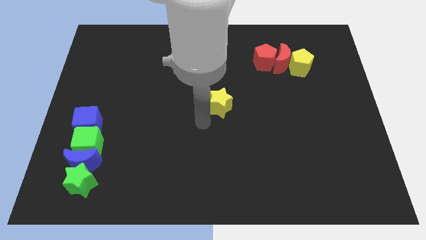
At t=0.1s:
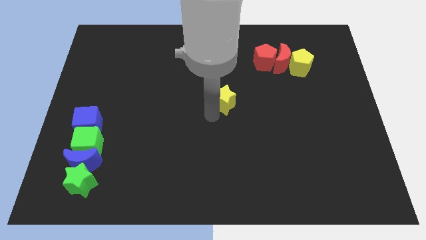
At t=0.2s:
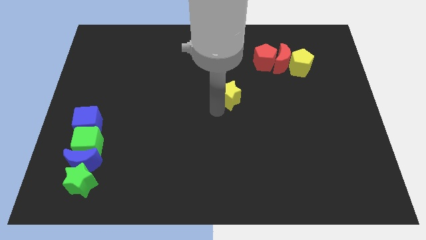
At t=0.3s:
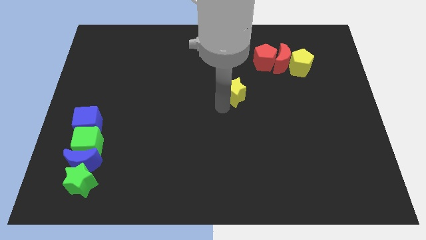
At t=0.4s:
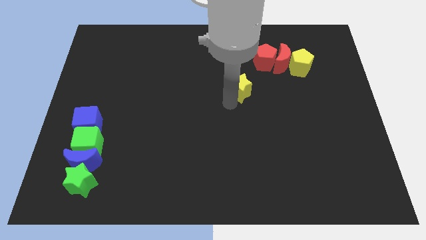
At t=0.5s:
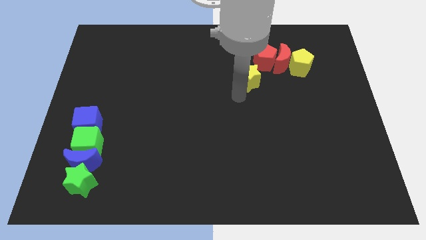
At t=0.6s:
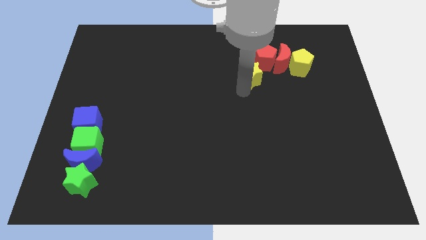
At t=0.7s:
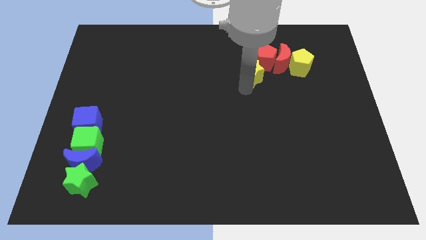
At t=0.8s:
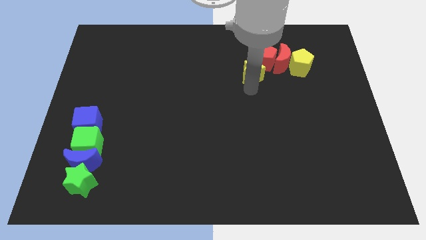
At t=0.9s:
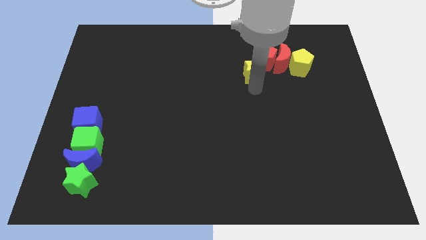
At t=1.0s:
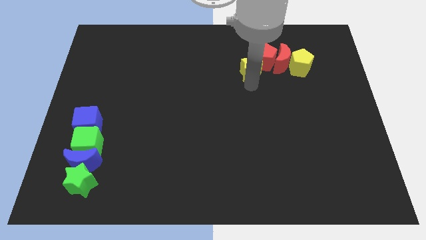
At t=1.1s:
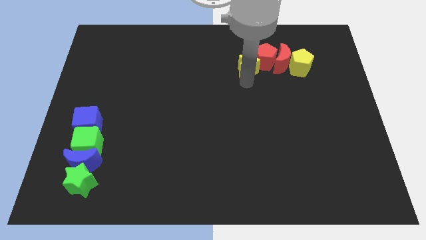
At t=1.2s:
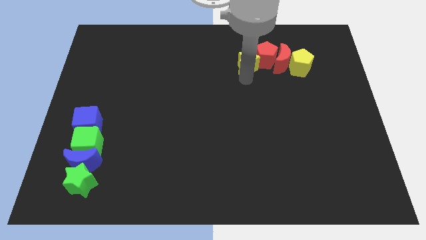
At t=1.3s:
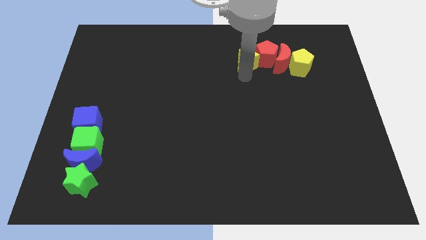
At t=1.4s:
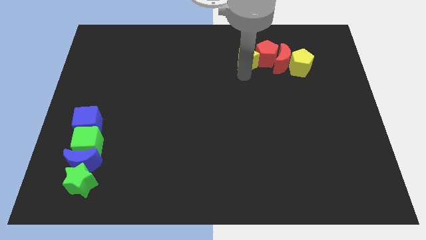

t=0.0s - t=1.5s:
move the yellow star into the red pentagon

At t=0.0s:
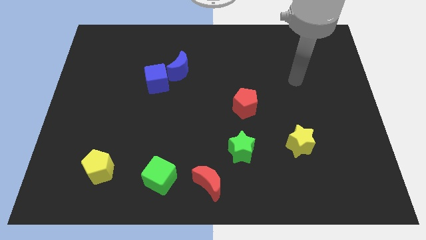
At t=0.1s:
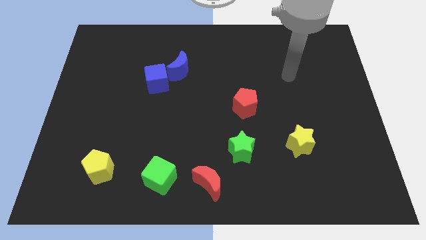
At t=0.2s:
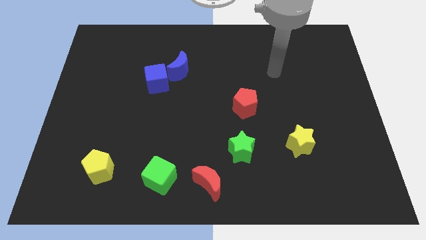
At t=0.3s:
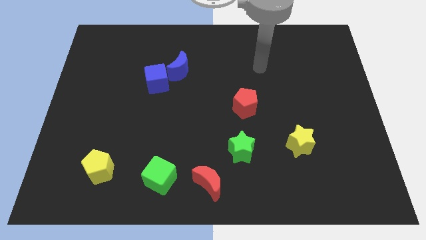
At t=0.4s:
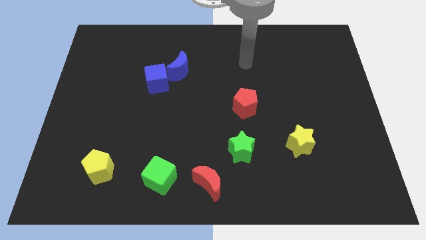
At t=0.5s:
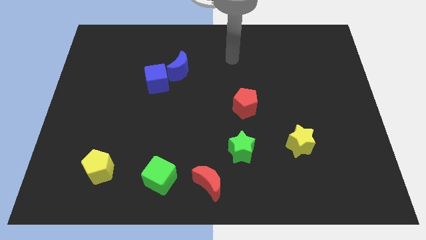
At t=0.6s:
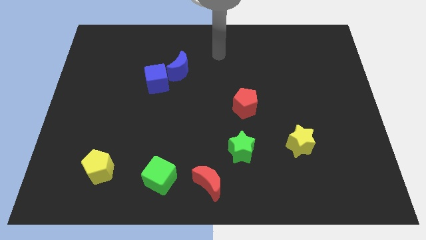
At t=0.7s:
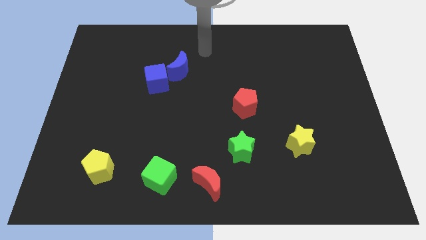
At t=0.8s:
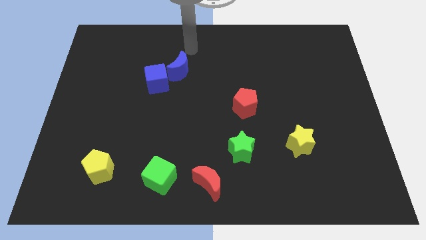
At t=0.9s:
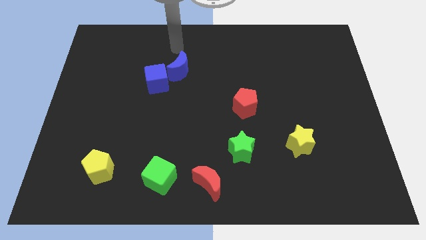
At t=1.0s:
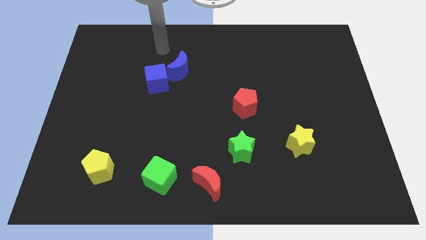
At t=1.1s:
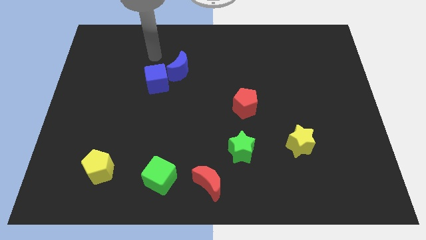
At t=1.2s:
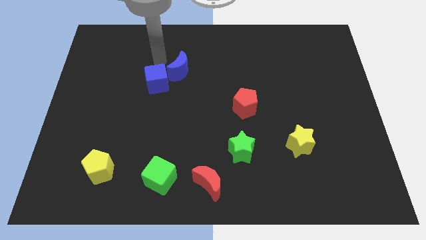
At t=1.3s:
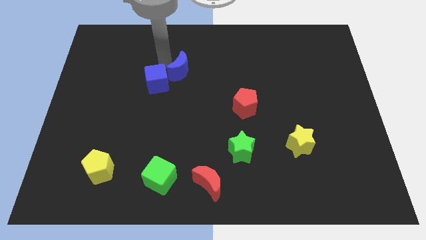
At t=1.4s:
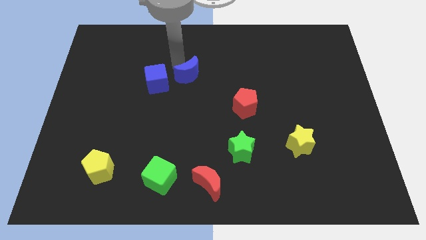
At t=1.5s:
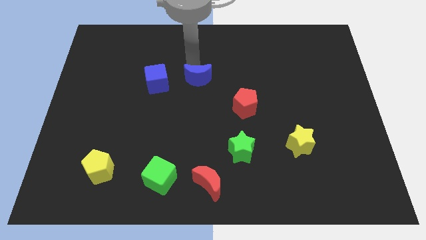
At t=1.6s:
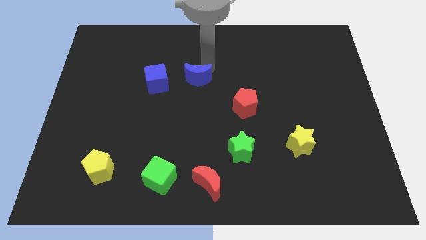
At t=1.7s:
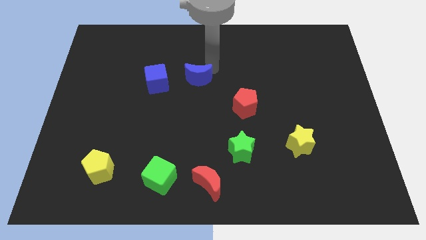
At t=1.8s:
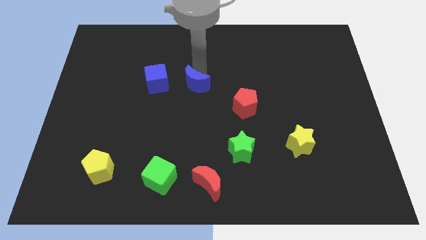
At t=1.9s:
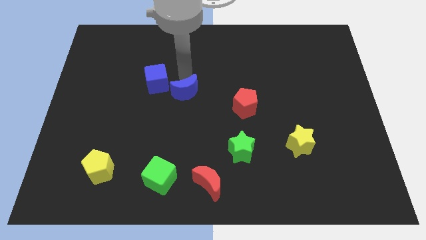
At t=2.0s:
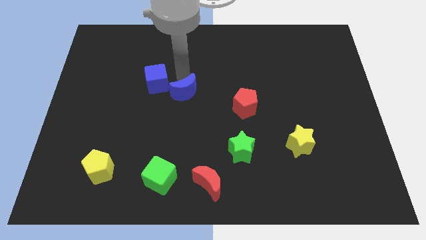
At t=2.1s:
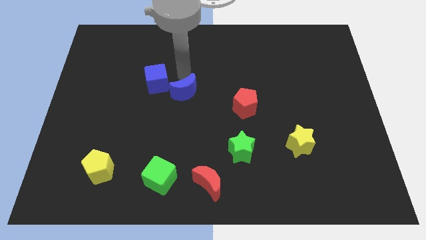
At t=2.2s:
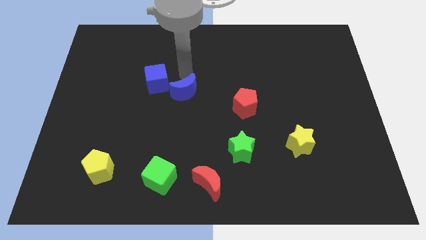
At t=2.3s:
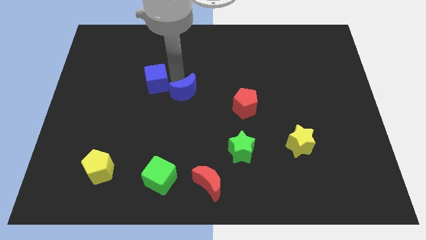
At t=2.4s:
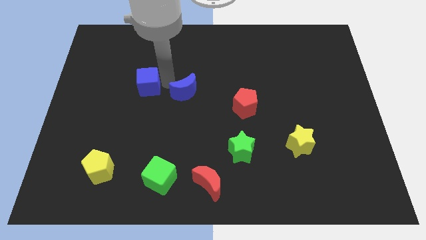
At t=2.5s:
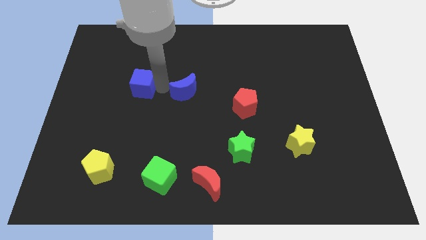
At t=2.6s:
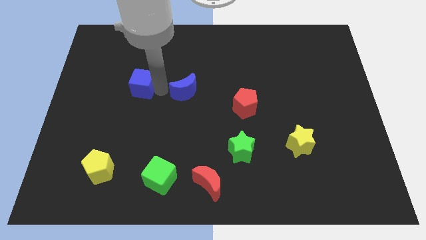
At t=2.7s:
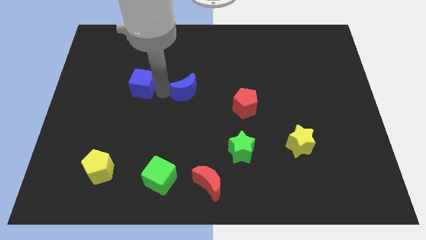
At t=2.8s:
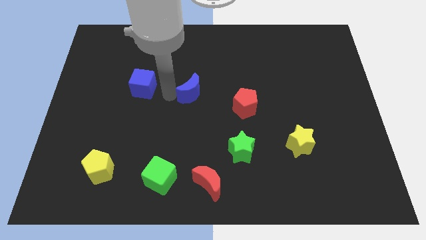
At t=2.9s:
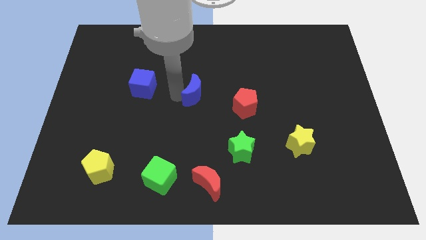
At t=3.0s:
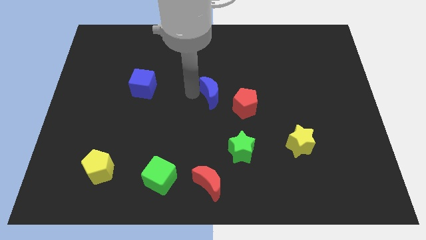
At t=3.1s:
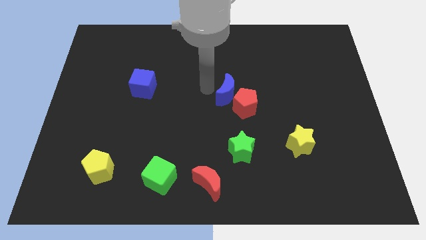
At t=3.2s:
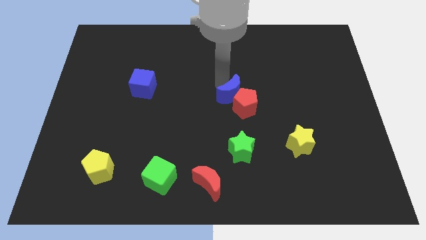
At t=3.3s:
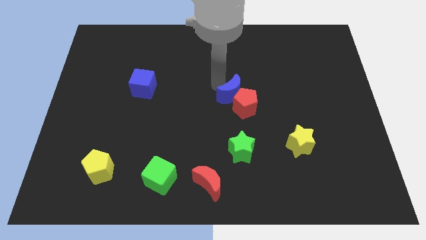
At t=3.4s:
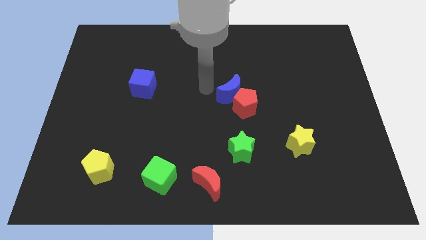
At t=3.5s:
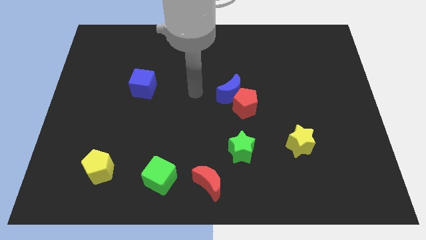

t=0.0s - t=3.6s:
move the blue crescent near the red pentagon

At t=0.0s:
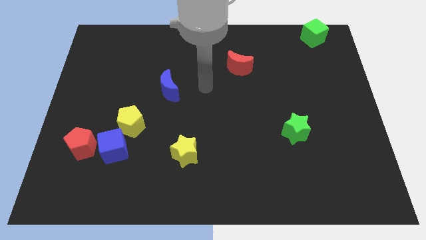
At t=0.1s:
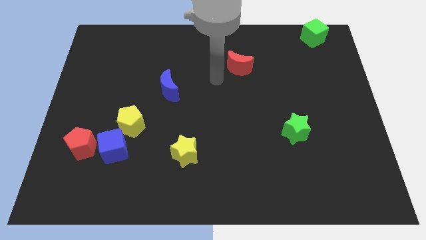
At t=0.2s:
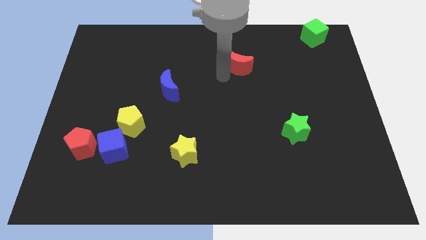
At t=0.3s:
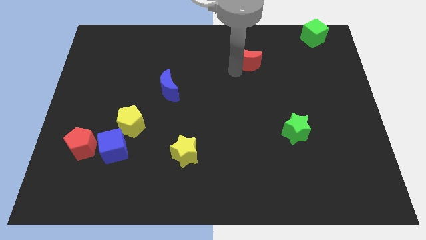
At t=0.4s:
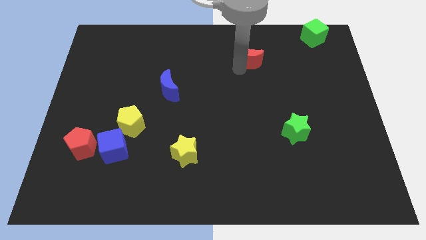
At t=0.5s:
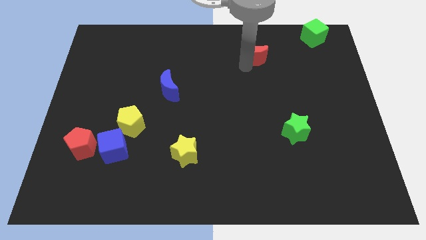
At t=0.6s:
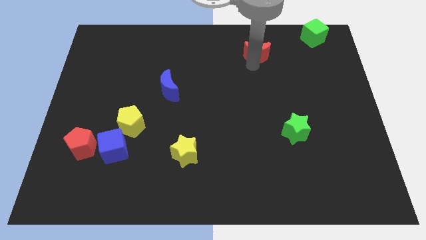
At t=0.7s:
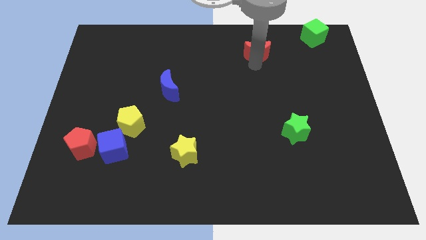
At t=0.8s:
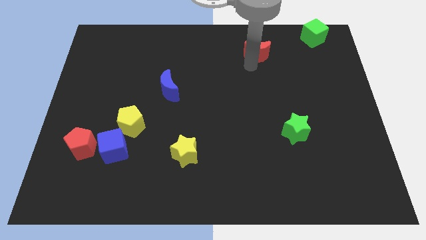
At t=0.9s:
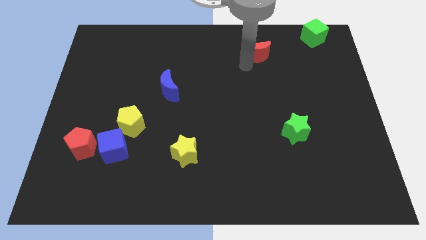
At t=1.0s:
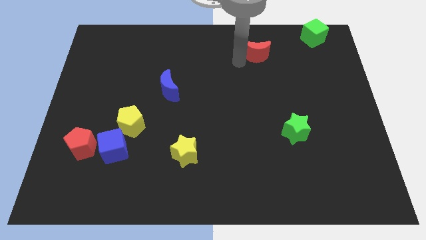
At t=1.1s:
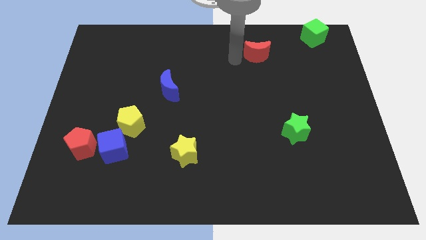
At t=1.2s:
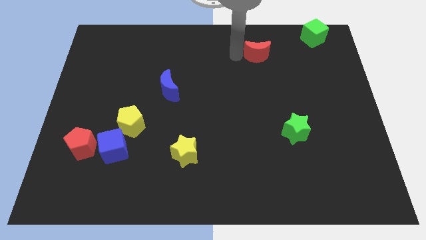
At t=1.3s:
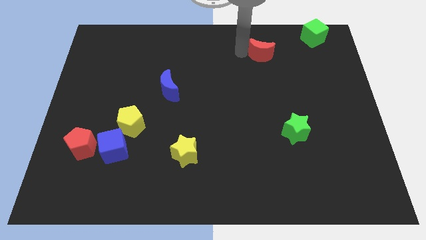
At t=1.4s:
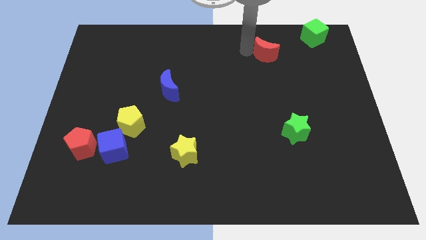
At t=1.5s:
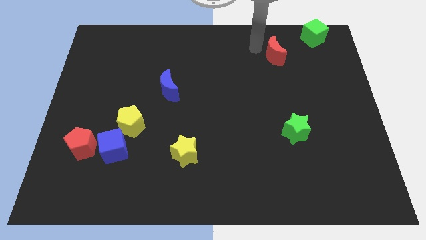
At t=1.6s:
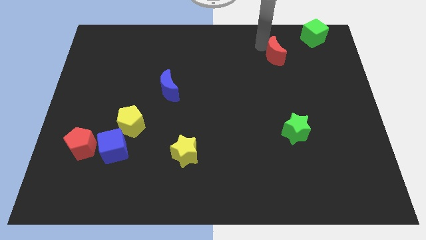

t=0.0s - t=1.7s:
move the red crescent to the top right of the board

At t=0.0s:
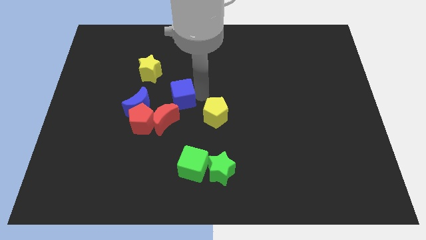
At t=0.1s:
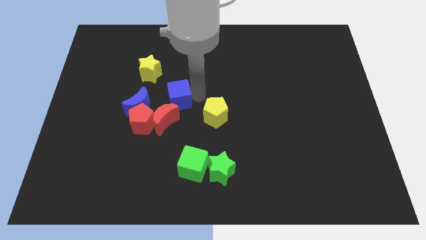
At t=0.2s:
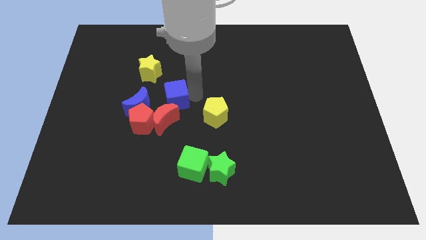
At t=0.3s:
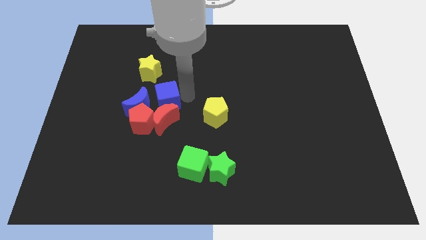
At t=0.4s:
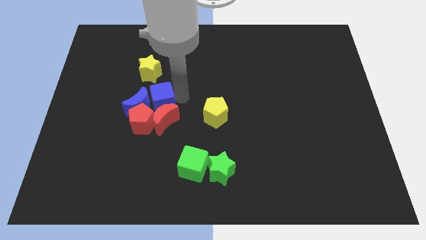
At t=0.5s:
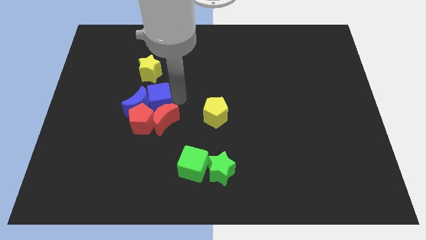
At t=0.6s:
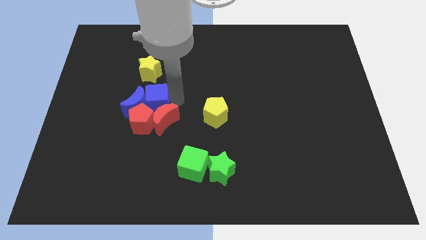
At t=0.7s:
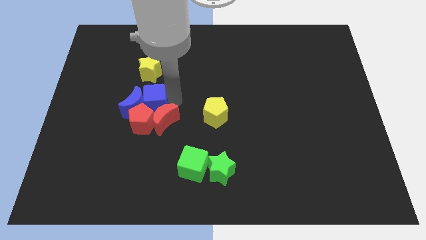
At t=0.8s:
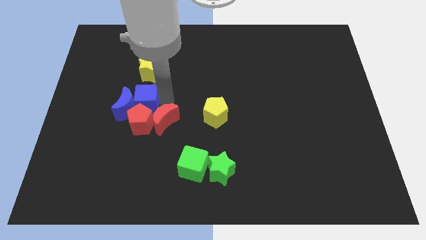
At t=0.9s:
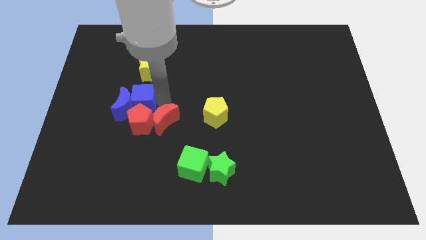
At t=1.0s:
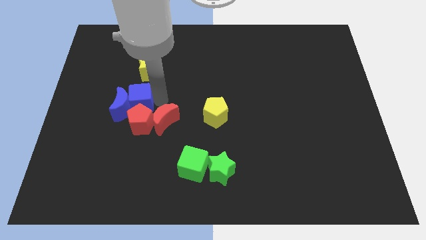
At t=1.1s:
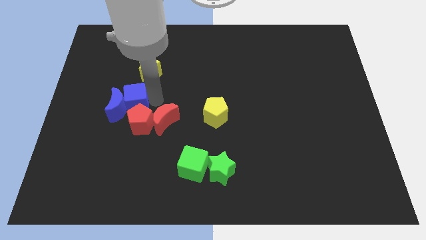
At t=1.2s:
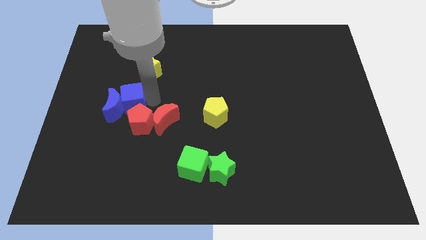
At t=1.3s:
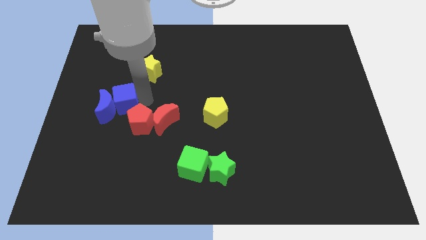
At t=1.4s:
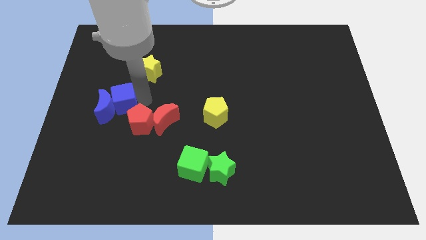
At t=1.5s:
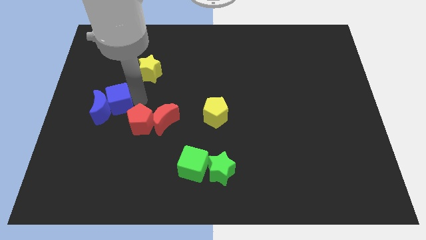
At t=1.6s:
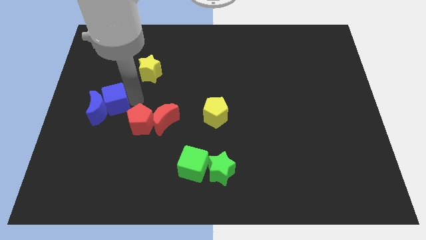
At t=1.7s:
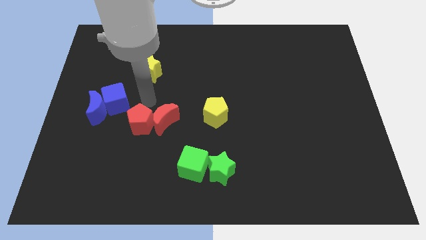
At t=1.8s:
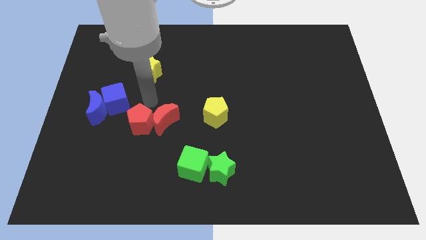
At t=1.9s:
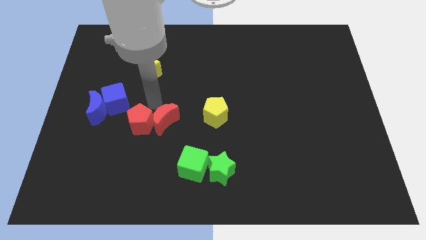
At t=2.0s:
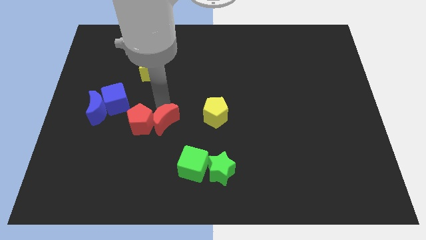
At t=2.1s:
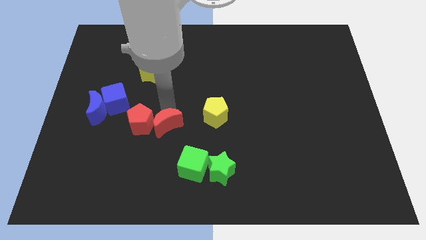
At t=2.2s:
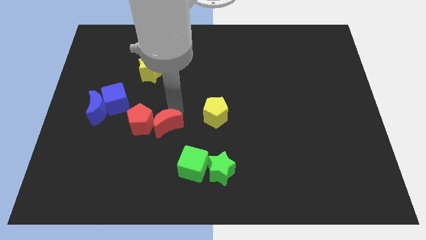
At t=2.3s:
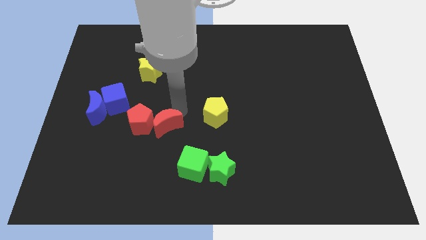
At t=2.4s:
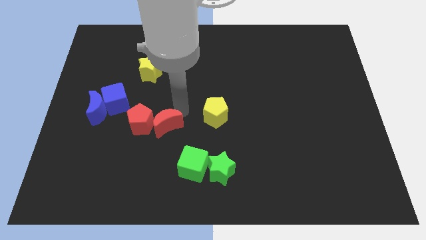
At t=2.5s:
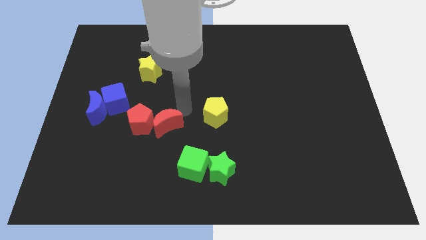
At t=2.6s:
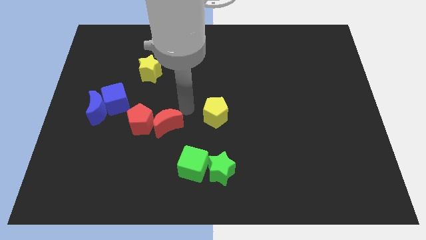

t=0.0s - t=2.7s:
slide the blue blocks to the center left
